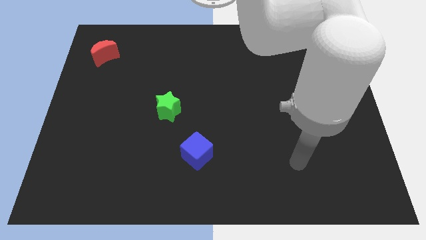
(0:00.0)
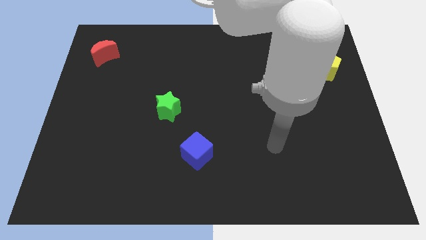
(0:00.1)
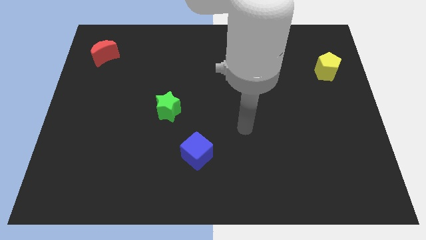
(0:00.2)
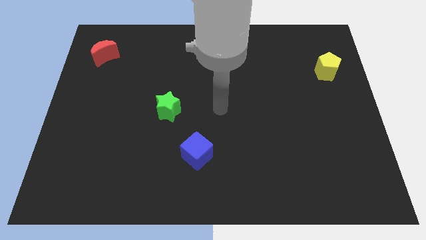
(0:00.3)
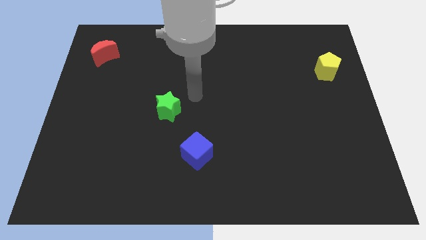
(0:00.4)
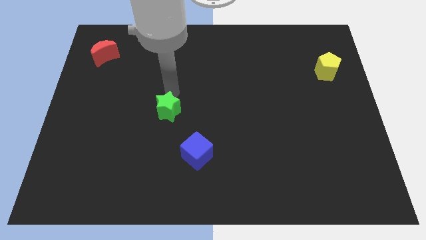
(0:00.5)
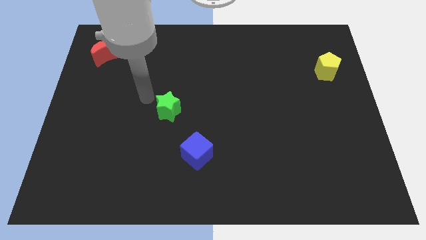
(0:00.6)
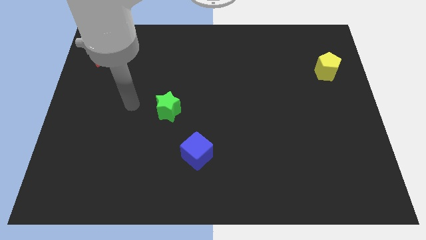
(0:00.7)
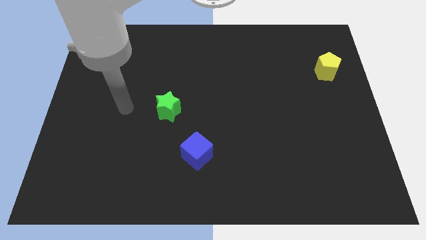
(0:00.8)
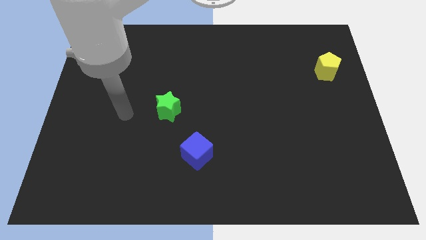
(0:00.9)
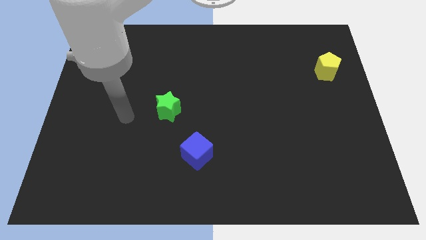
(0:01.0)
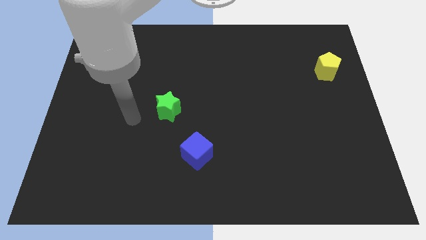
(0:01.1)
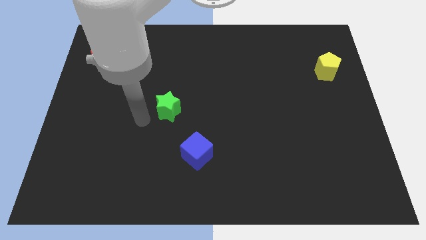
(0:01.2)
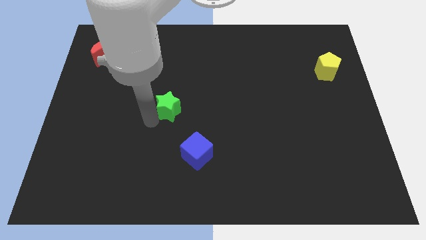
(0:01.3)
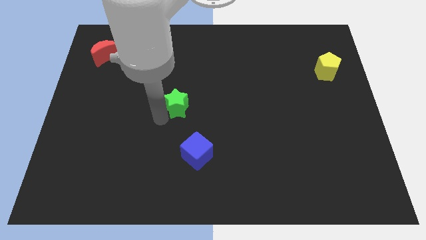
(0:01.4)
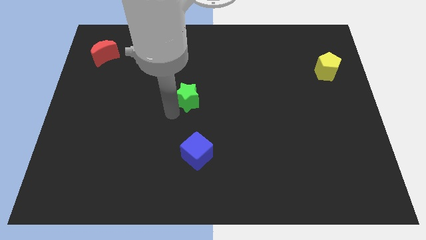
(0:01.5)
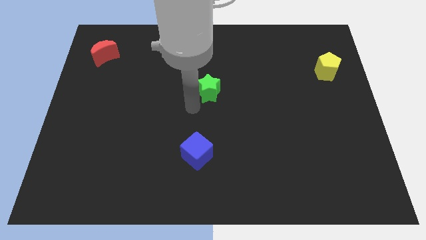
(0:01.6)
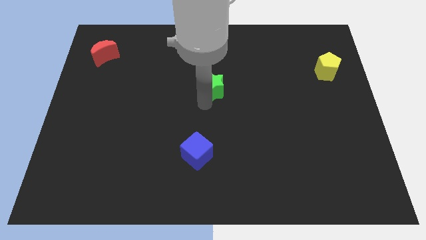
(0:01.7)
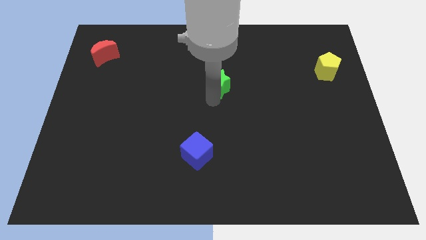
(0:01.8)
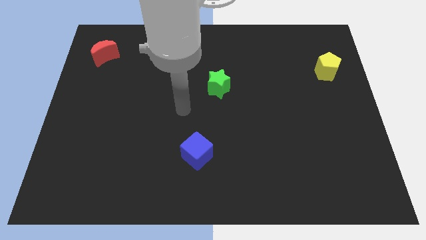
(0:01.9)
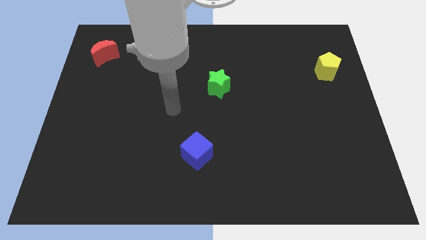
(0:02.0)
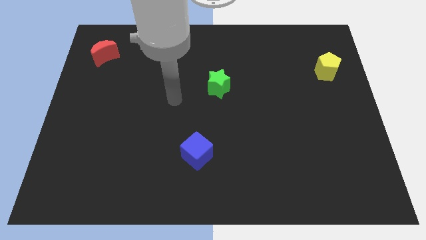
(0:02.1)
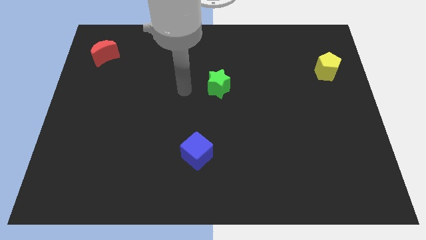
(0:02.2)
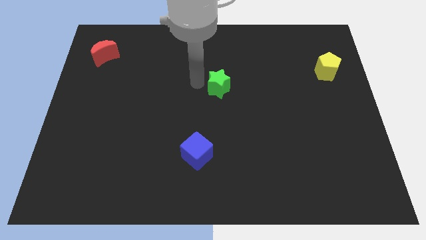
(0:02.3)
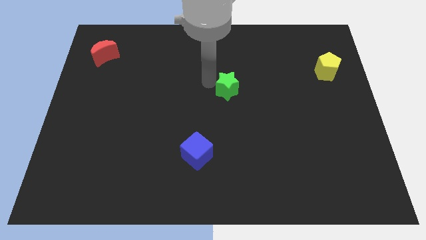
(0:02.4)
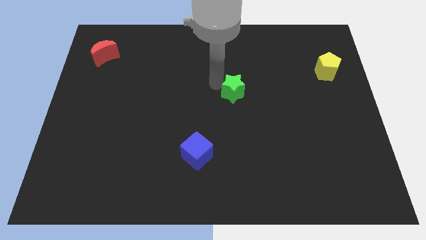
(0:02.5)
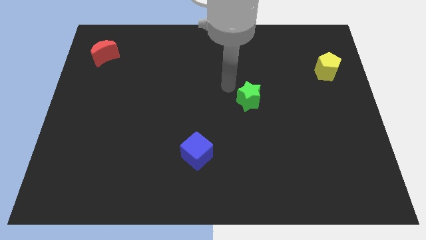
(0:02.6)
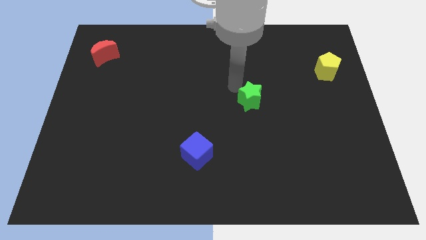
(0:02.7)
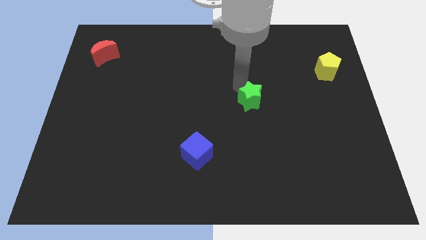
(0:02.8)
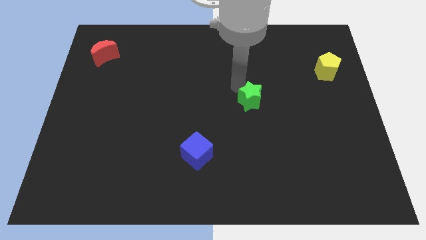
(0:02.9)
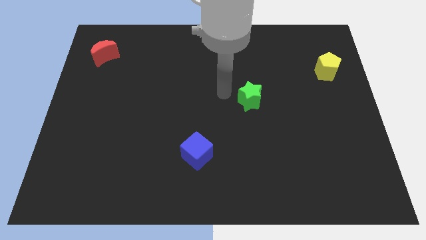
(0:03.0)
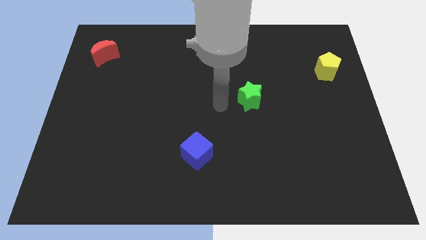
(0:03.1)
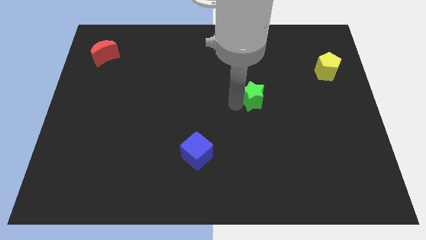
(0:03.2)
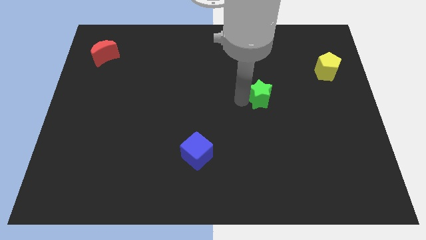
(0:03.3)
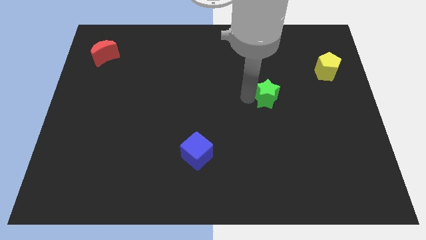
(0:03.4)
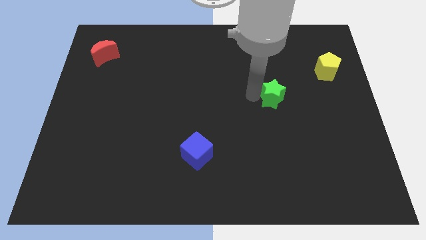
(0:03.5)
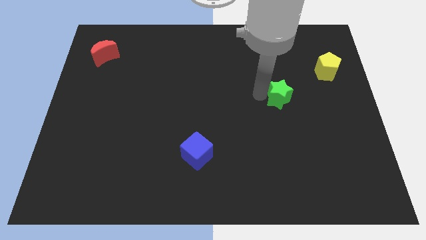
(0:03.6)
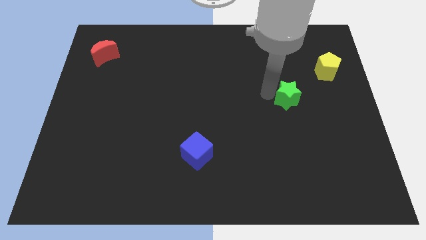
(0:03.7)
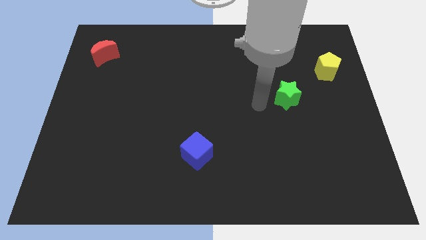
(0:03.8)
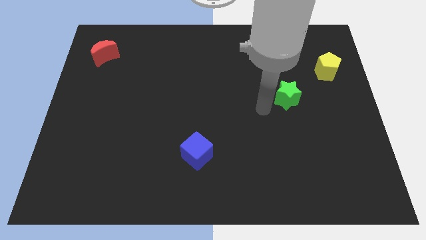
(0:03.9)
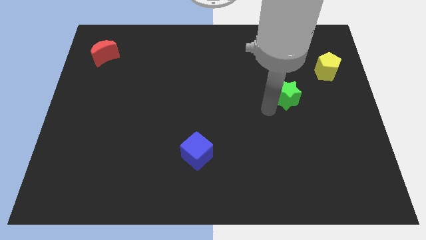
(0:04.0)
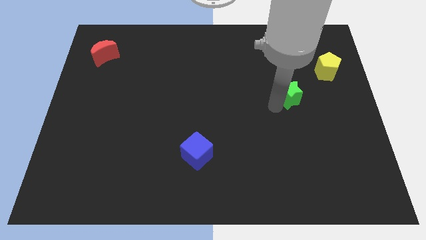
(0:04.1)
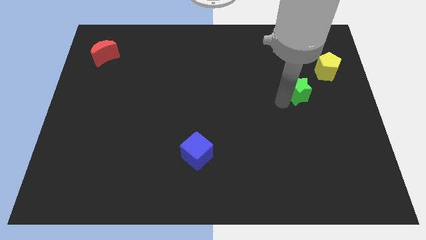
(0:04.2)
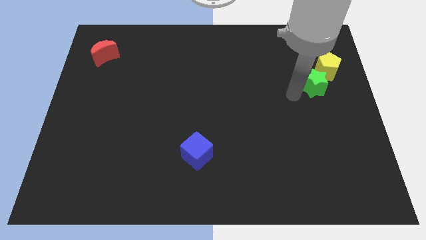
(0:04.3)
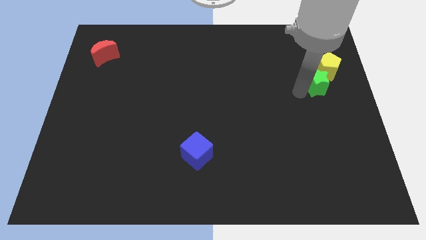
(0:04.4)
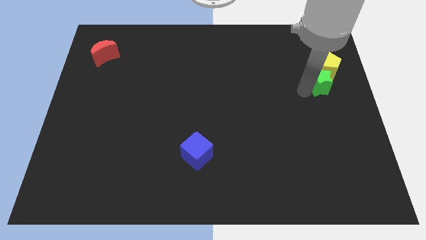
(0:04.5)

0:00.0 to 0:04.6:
slide the green star towards the pentagon

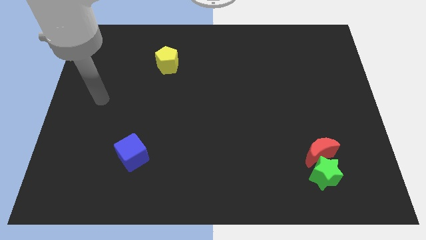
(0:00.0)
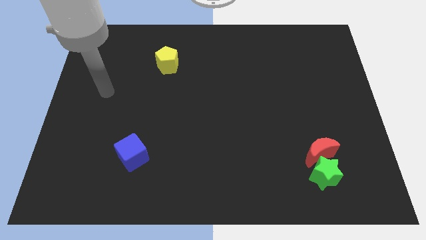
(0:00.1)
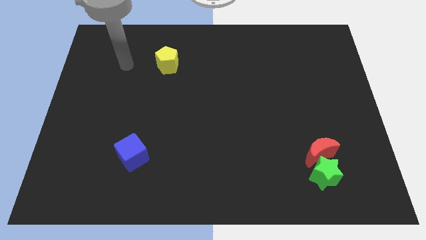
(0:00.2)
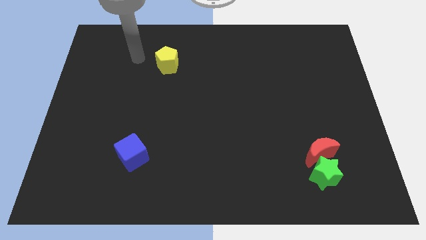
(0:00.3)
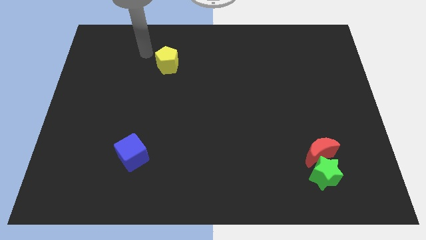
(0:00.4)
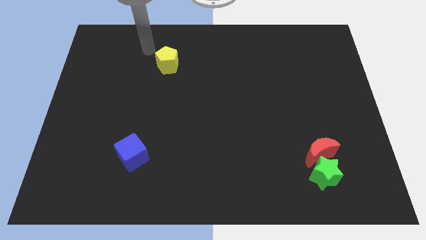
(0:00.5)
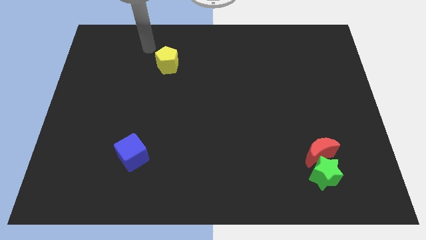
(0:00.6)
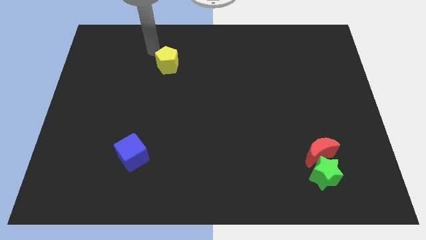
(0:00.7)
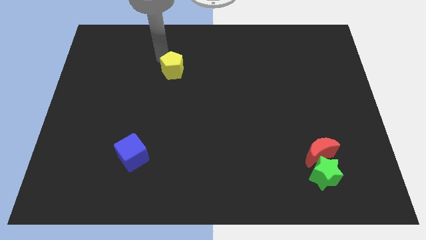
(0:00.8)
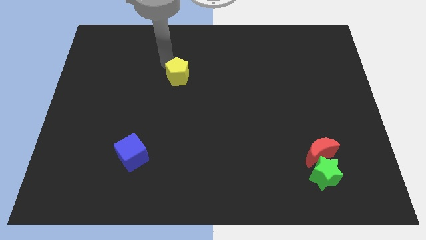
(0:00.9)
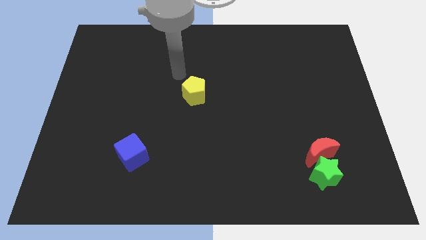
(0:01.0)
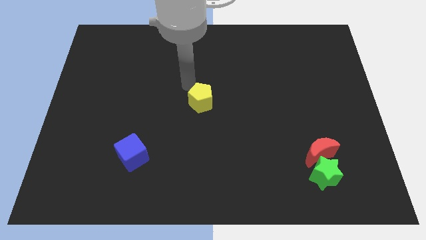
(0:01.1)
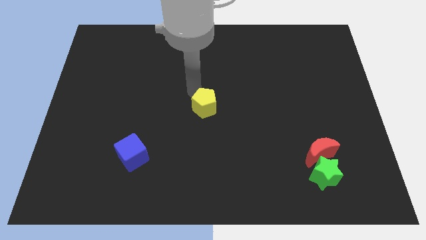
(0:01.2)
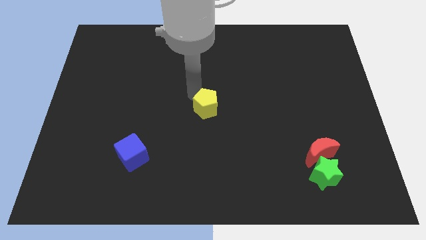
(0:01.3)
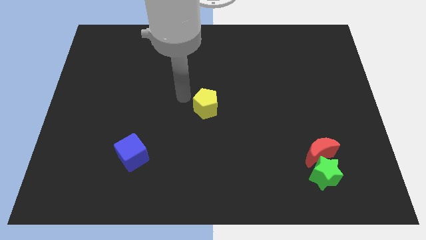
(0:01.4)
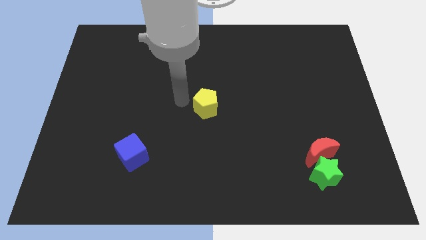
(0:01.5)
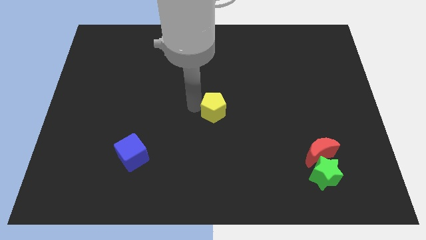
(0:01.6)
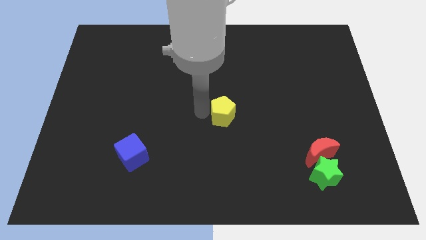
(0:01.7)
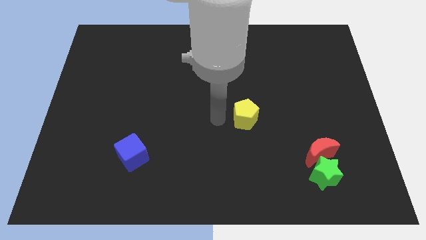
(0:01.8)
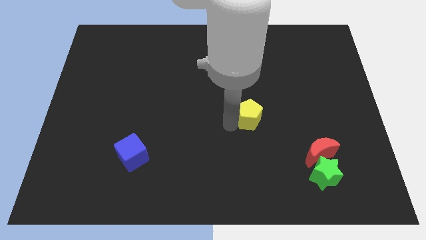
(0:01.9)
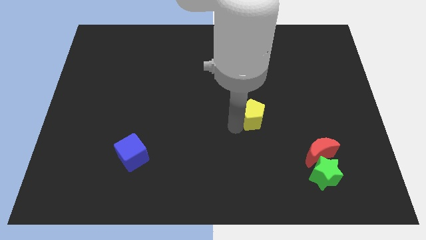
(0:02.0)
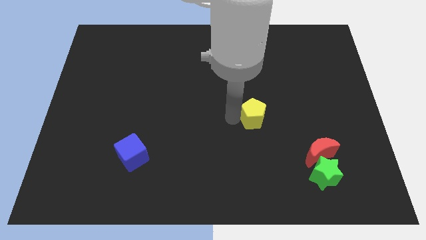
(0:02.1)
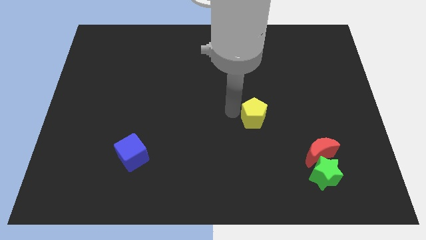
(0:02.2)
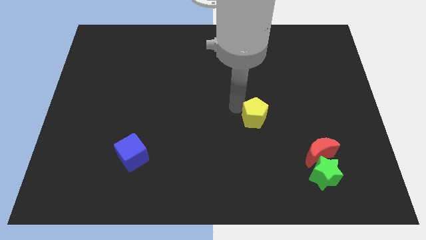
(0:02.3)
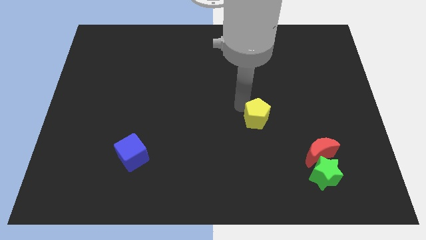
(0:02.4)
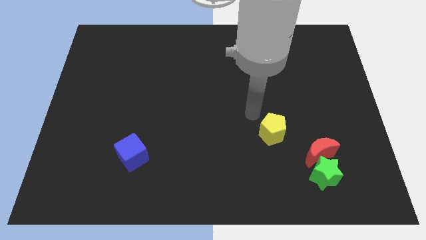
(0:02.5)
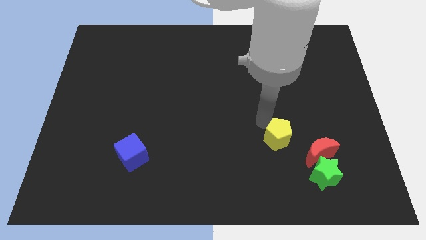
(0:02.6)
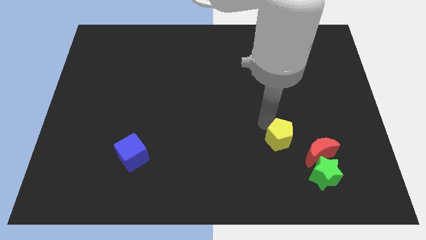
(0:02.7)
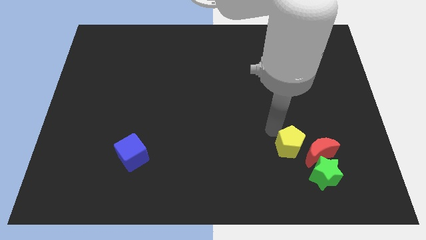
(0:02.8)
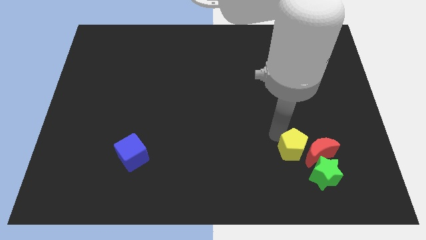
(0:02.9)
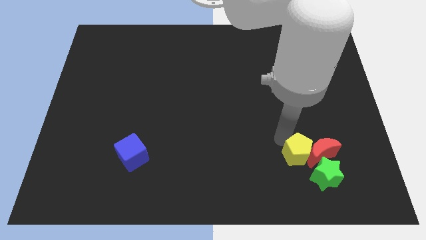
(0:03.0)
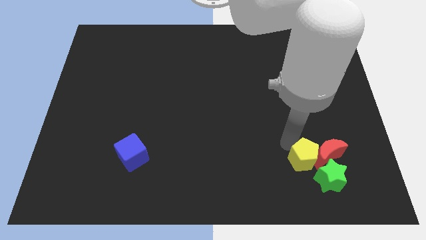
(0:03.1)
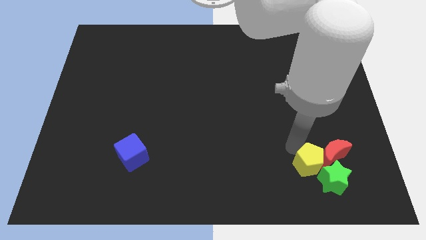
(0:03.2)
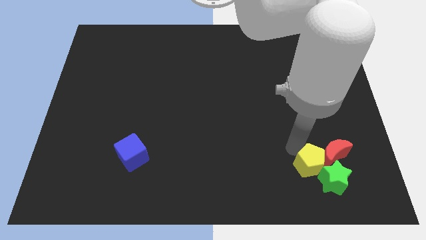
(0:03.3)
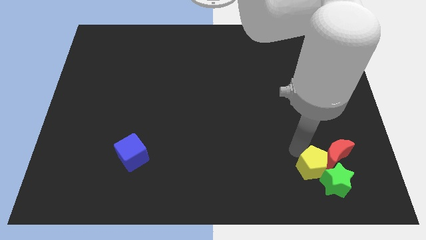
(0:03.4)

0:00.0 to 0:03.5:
move the yellow block towards the green block

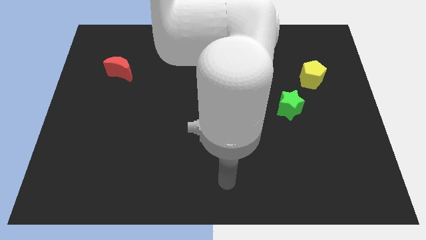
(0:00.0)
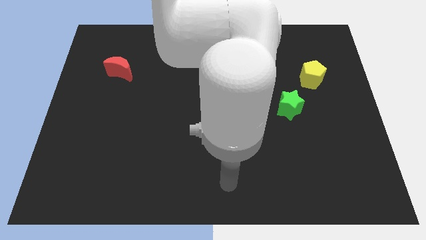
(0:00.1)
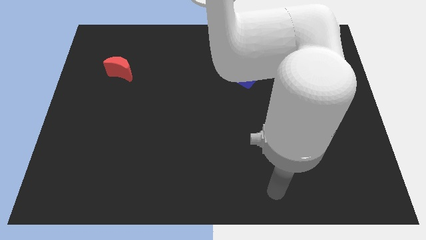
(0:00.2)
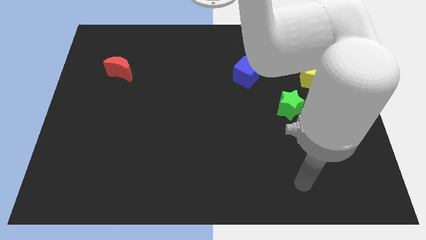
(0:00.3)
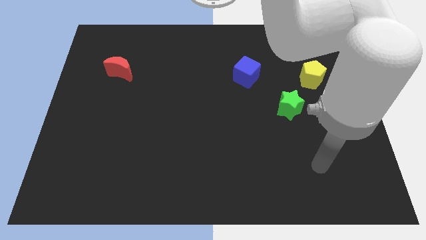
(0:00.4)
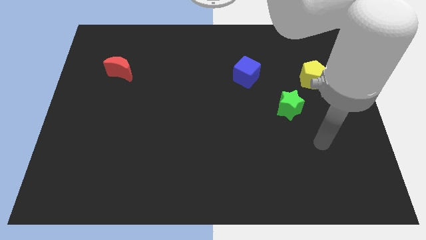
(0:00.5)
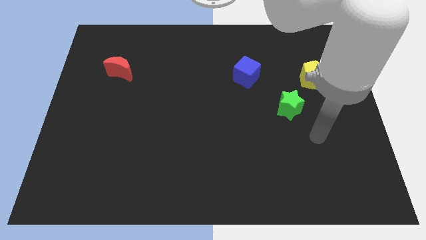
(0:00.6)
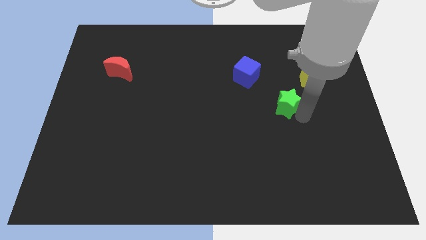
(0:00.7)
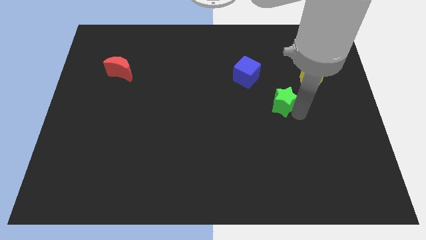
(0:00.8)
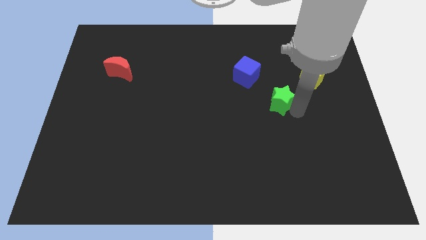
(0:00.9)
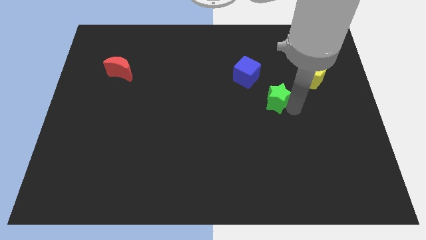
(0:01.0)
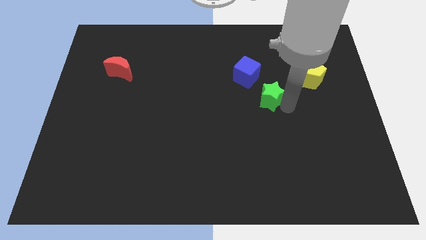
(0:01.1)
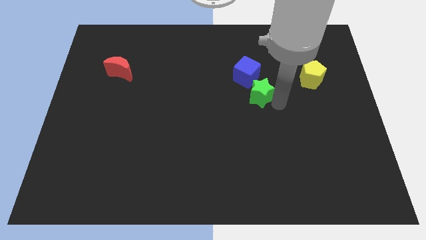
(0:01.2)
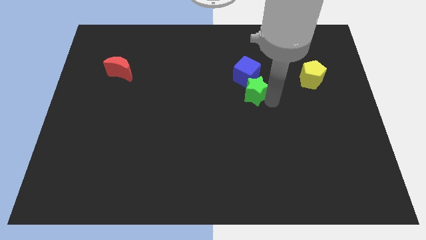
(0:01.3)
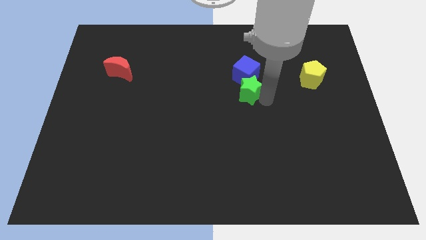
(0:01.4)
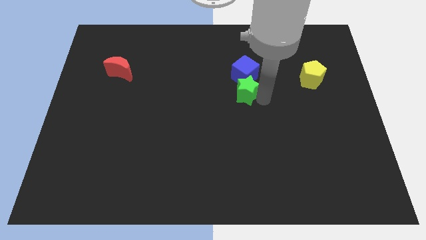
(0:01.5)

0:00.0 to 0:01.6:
slide the green star towards the blue cube
